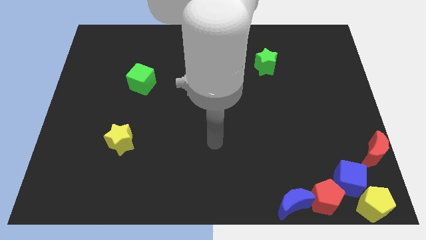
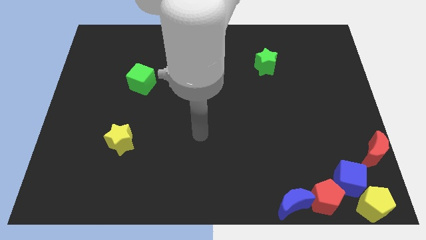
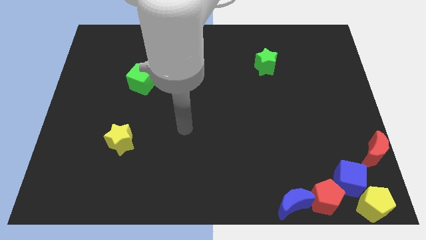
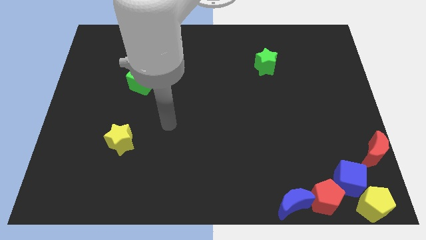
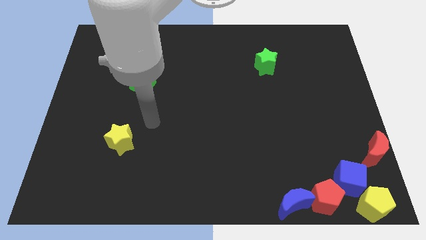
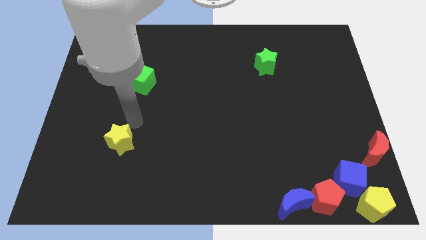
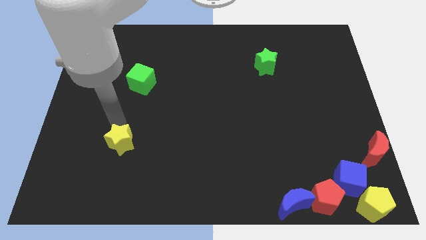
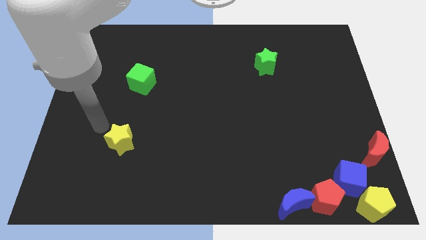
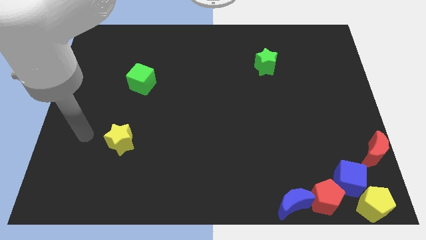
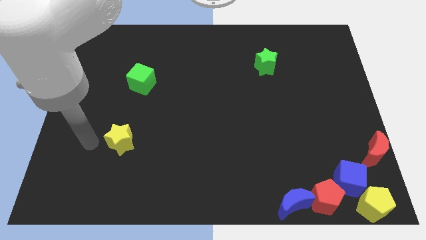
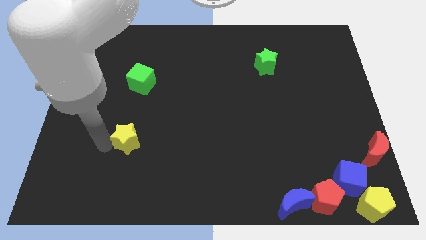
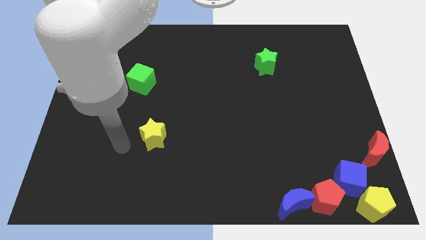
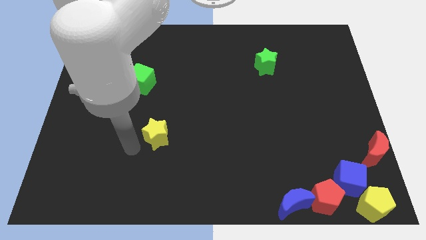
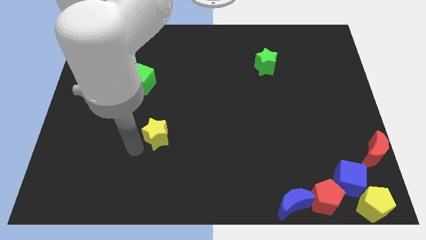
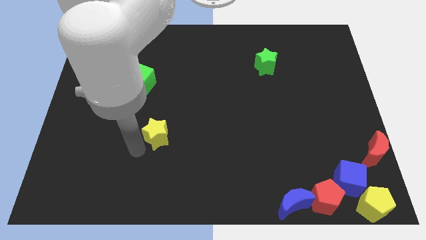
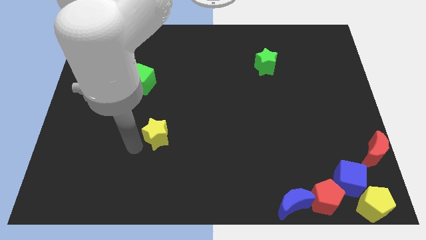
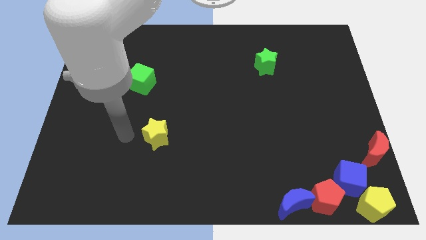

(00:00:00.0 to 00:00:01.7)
move the yellow star to the right

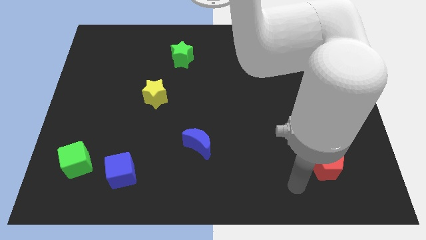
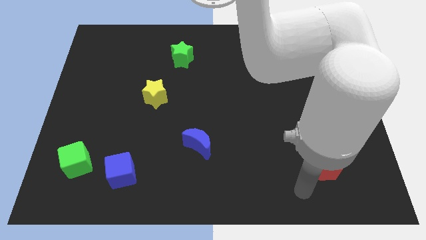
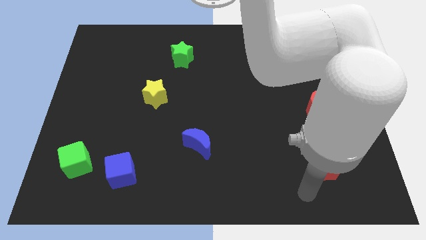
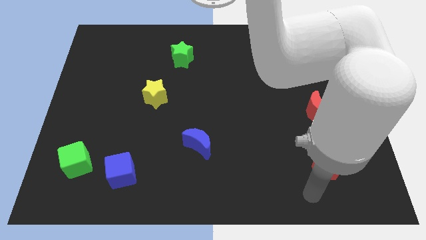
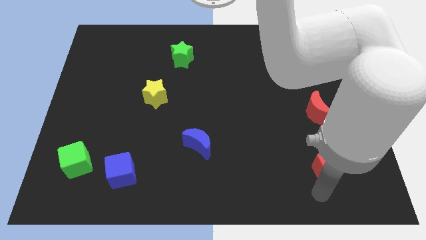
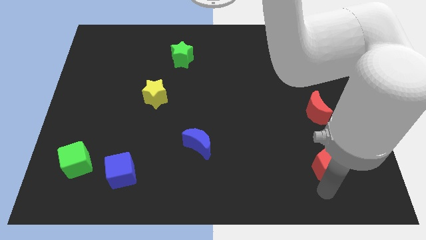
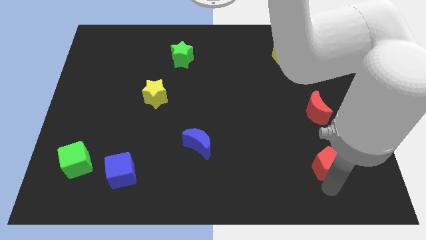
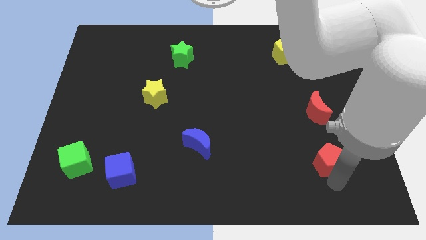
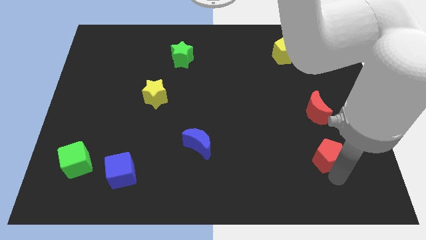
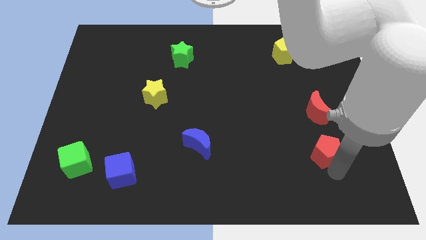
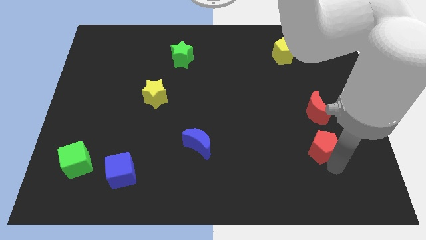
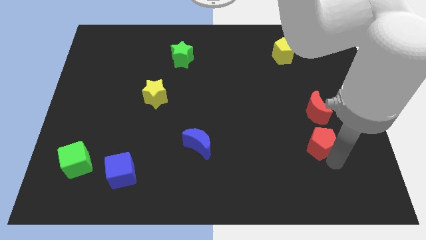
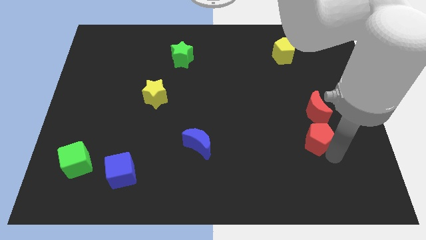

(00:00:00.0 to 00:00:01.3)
push the red pentagon into the red crescent

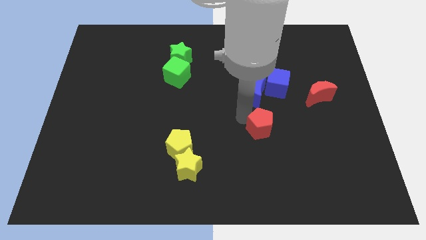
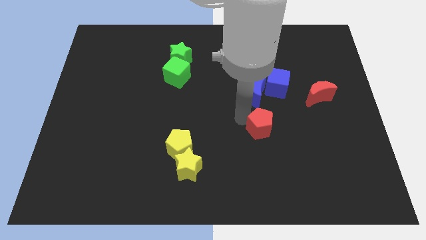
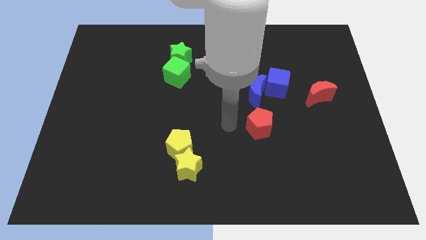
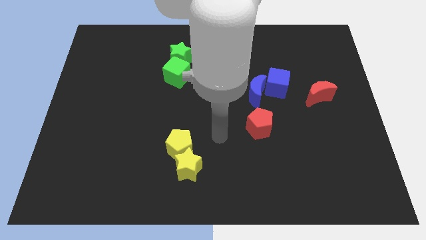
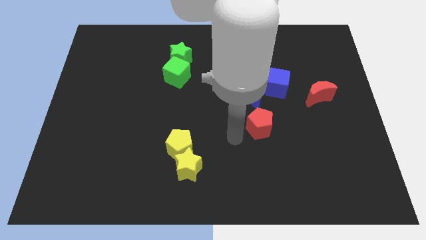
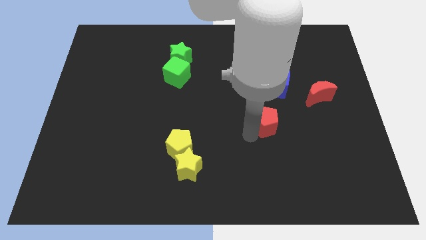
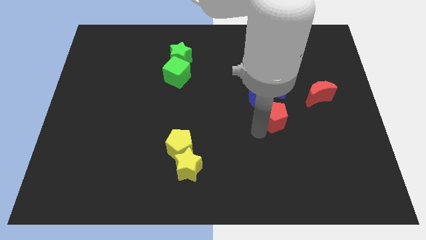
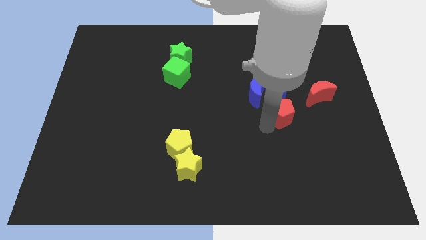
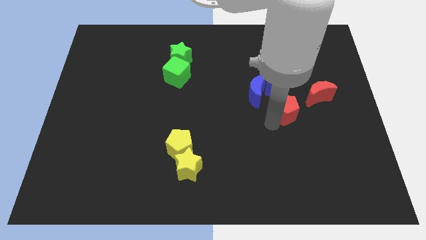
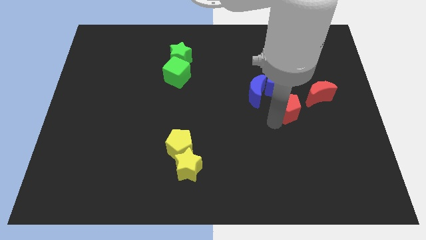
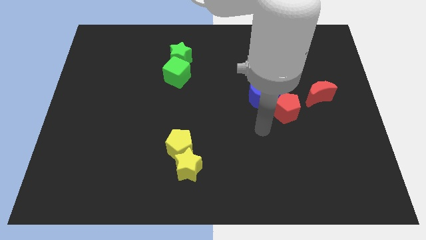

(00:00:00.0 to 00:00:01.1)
place red pentagon to the bottom left of red moon

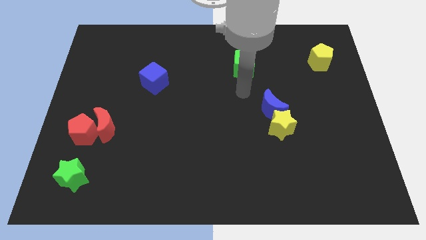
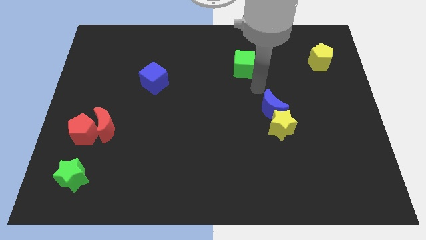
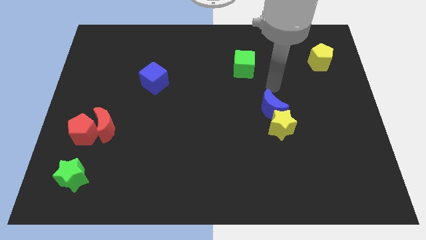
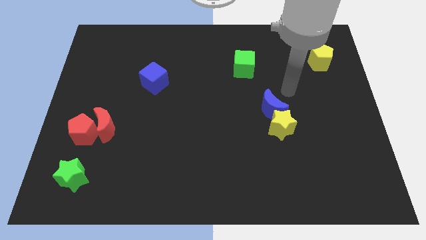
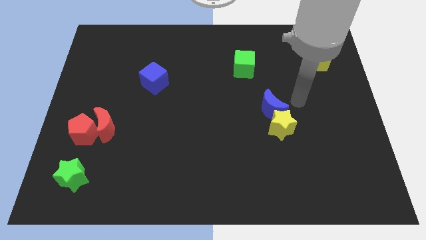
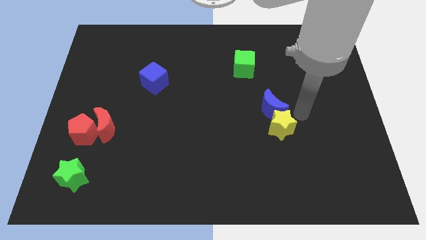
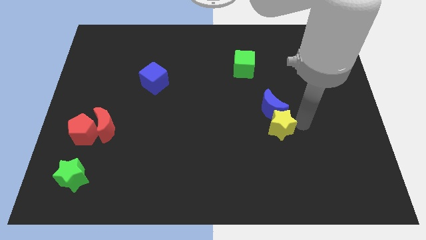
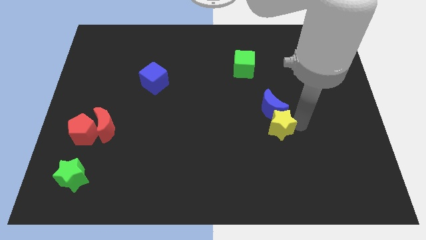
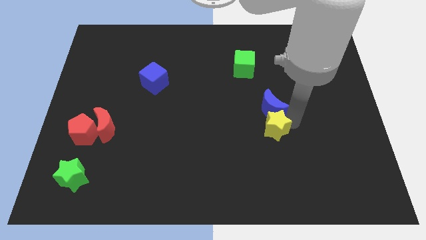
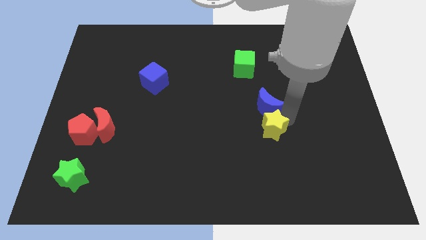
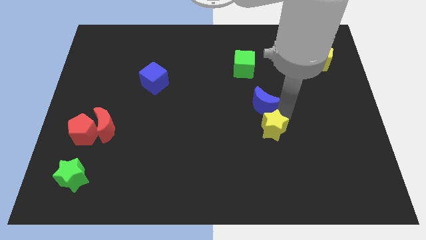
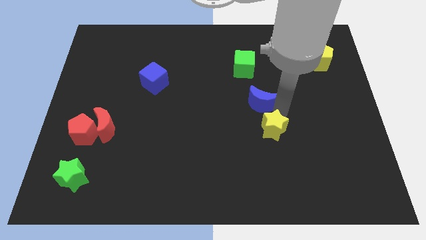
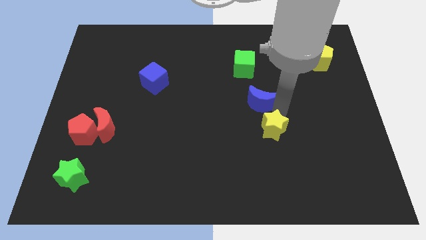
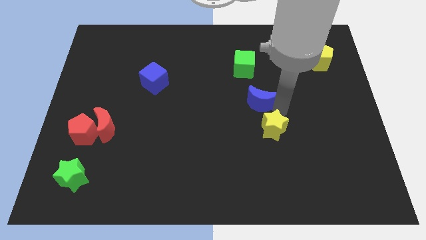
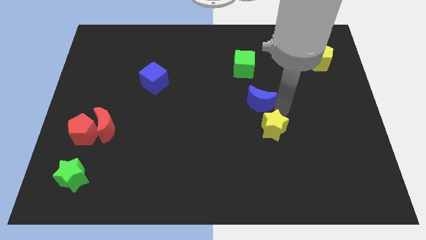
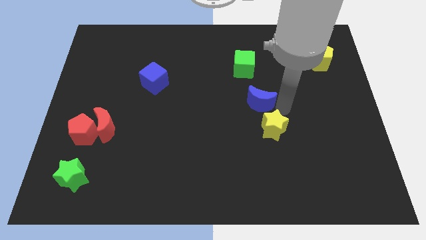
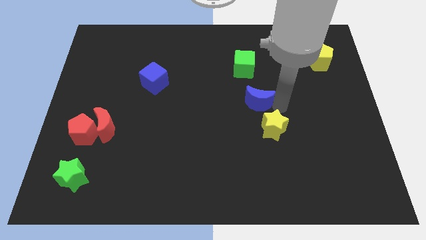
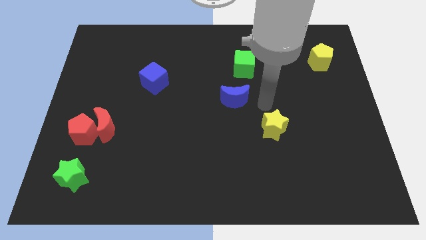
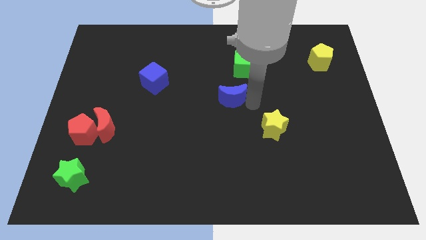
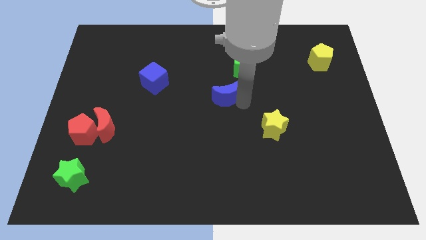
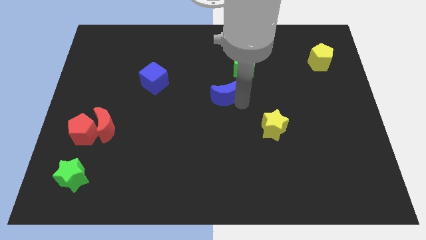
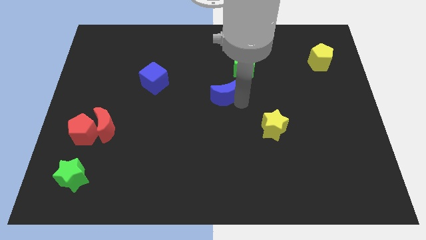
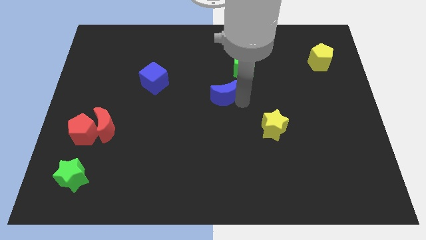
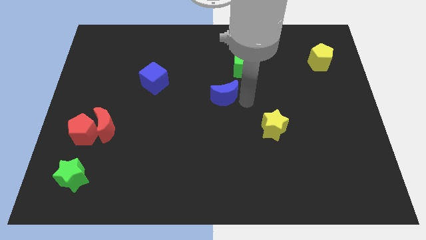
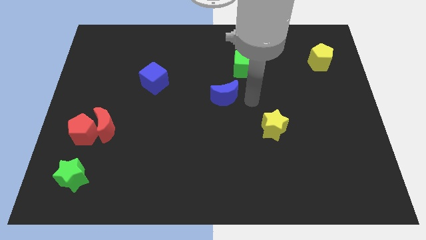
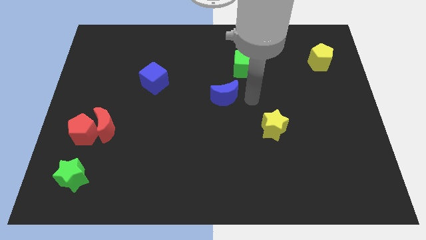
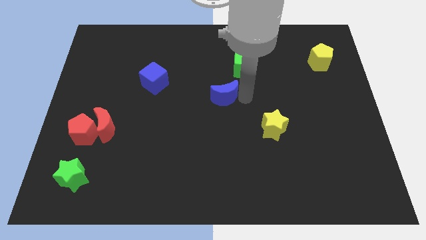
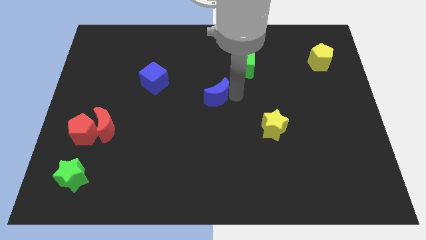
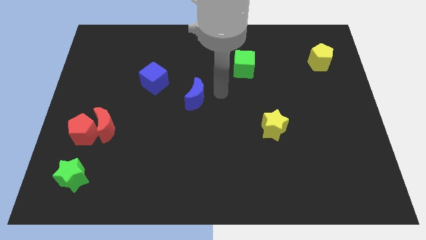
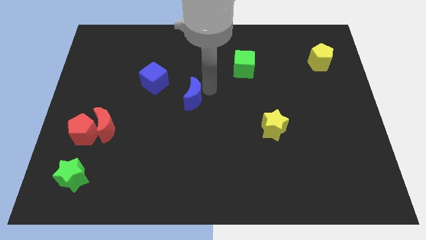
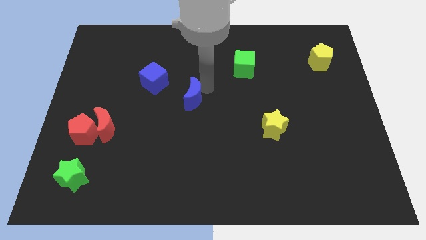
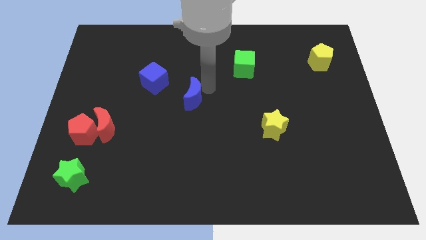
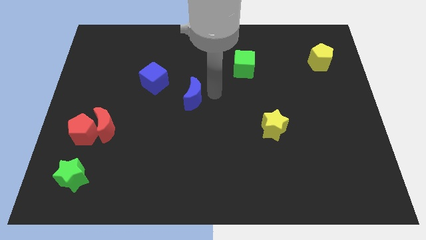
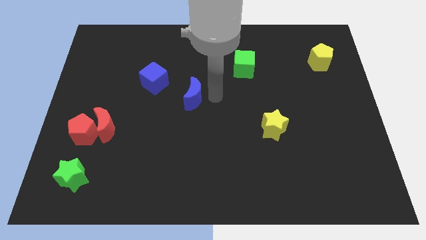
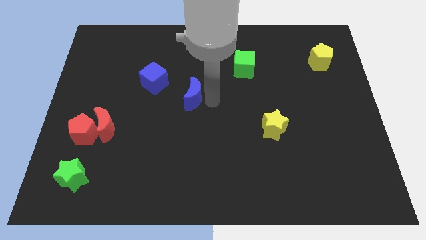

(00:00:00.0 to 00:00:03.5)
separate the blue moon and yellow star

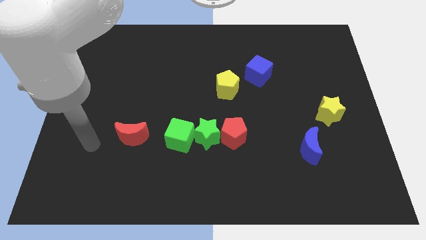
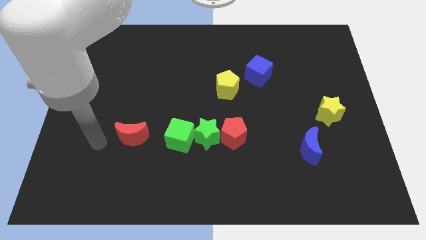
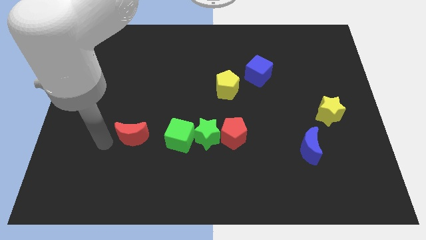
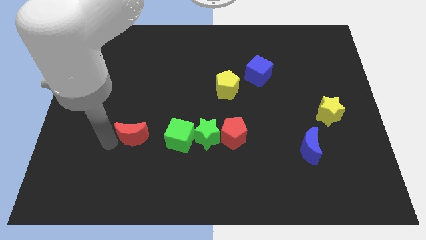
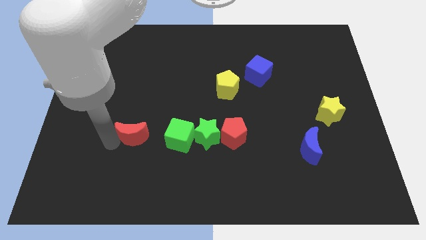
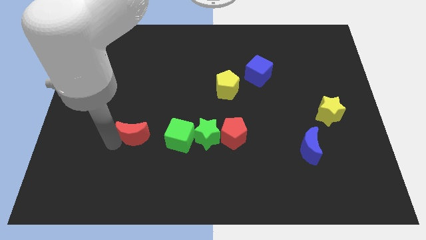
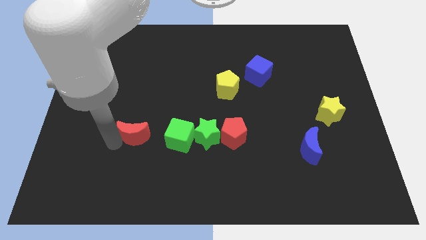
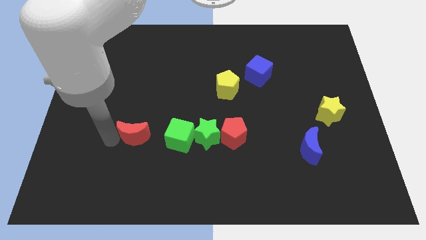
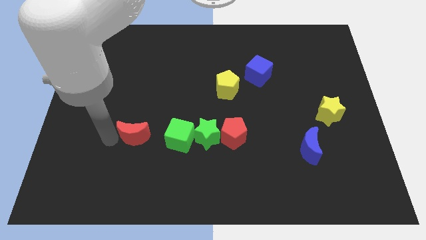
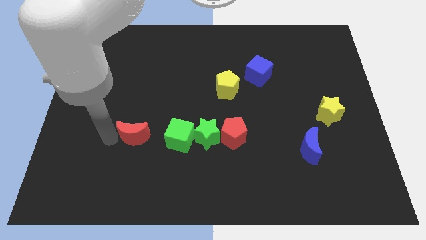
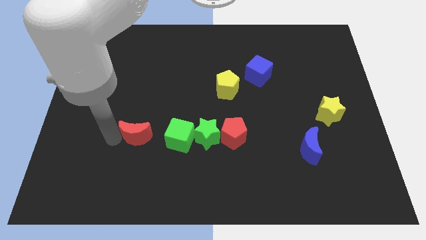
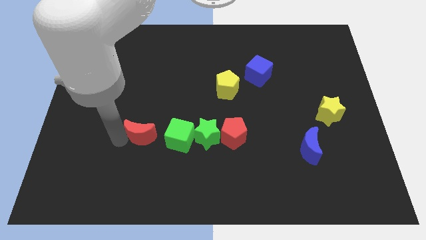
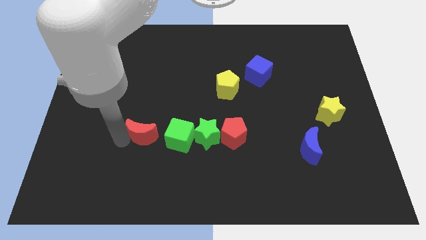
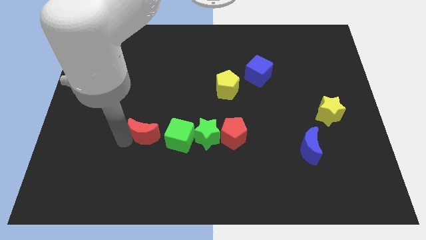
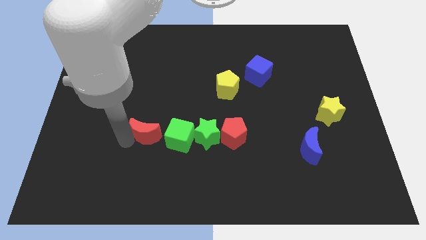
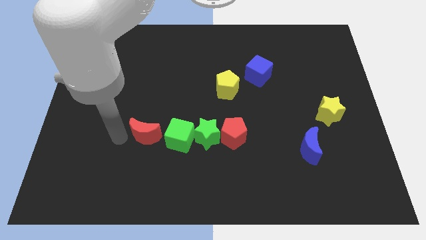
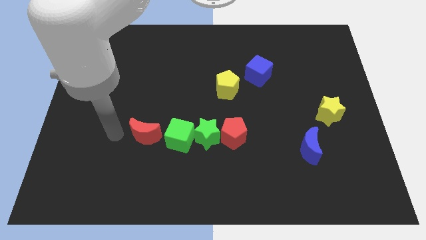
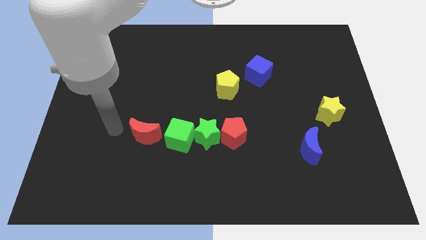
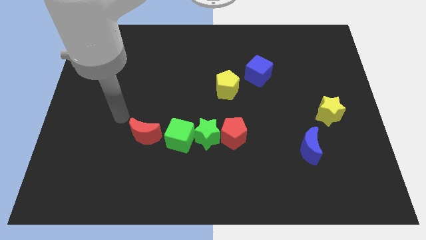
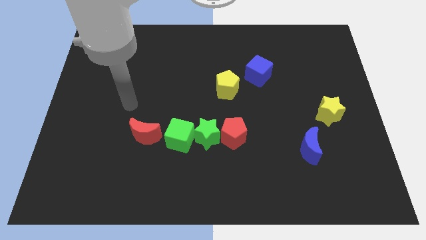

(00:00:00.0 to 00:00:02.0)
push the red crescent to the left of the green cube
